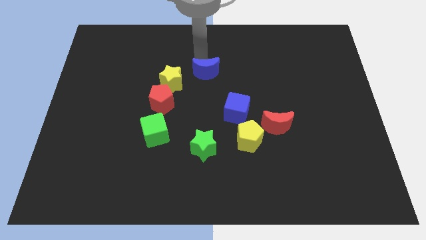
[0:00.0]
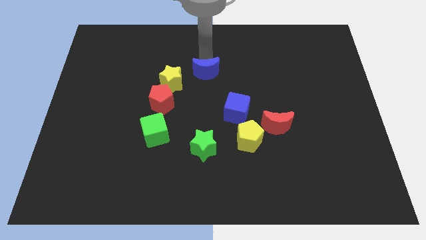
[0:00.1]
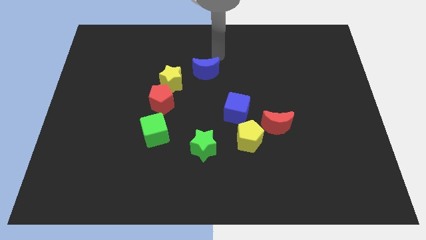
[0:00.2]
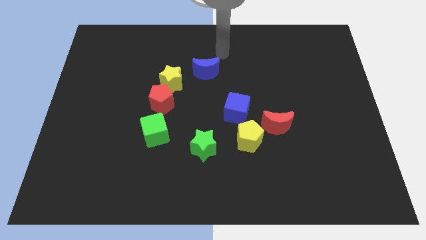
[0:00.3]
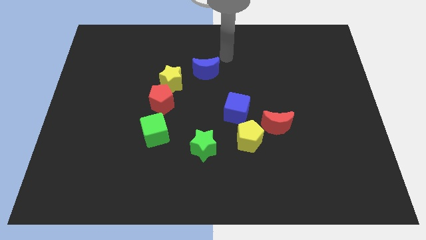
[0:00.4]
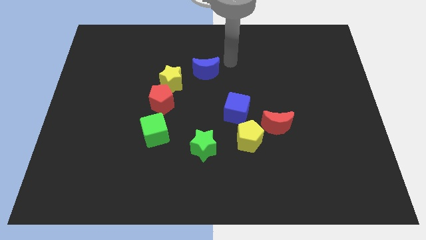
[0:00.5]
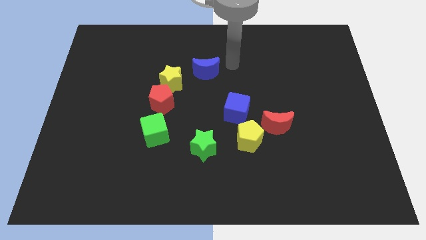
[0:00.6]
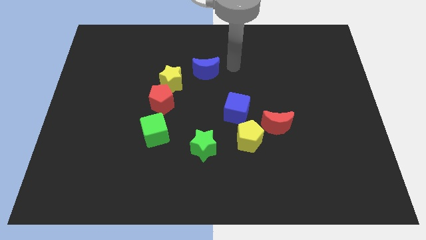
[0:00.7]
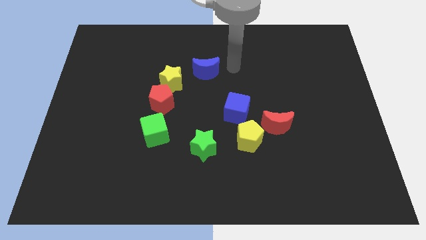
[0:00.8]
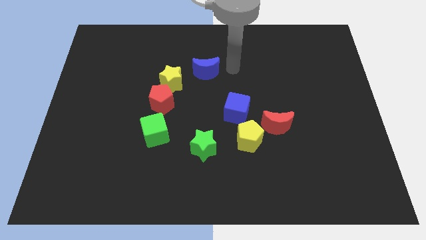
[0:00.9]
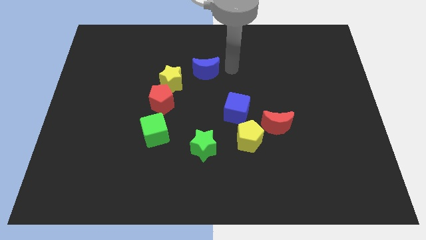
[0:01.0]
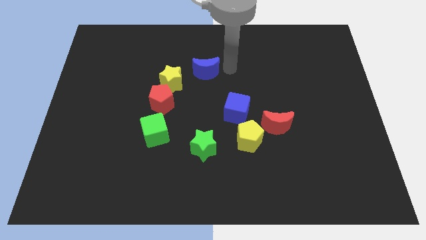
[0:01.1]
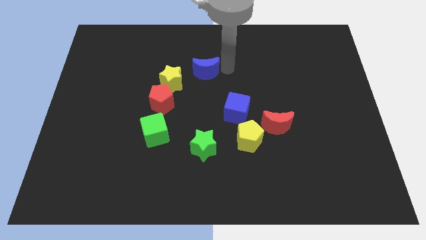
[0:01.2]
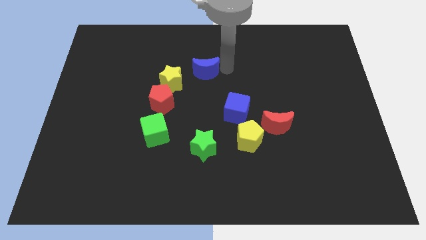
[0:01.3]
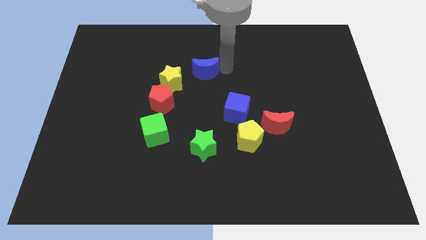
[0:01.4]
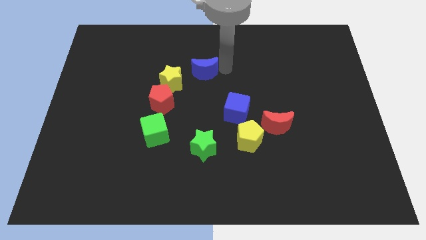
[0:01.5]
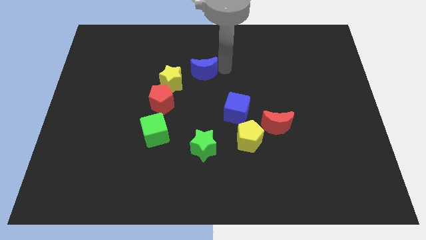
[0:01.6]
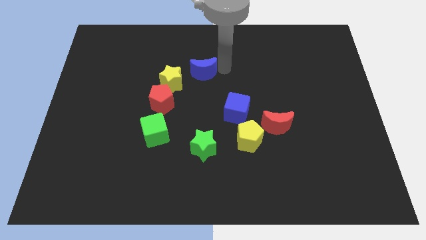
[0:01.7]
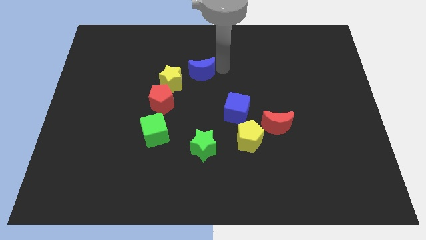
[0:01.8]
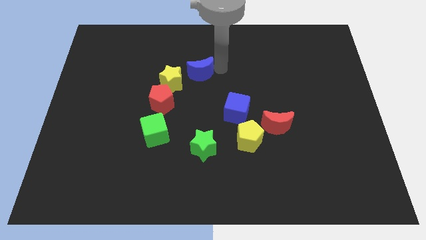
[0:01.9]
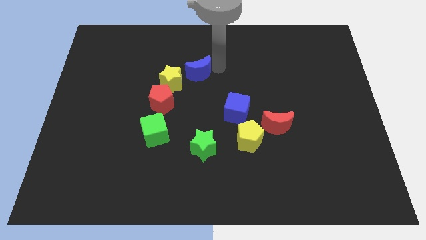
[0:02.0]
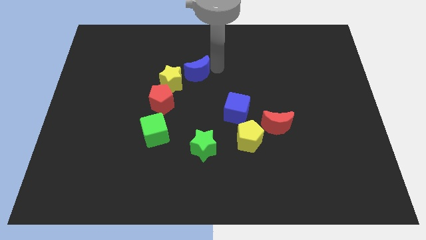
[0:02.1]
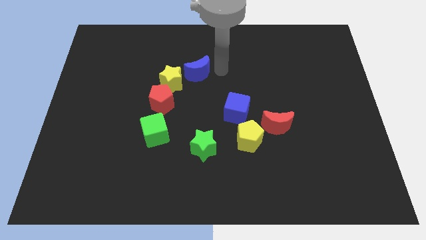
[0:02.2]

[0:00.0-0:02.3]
move the blue crescent to the top right side of the yellow star

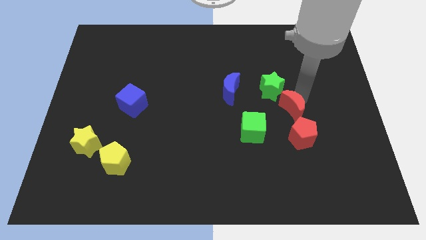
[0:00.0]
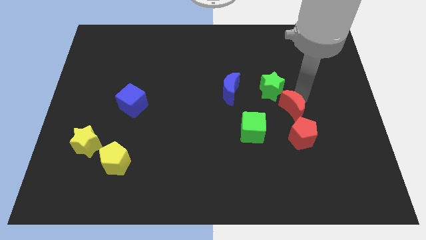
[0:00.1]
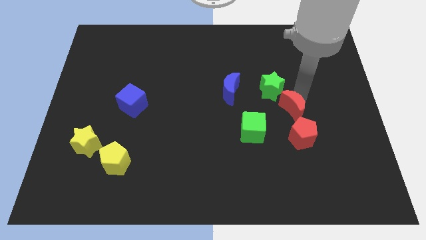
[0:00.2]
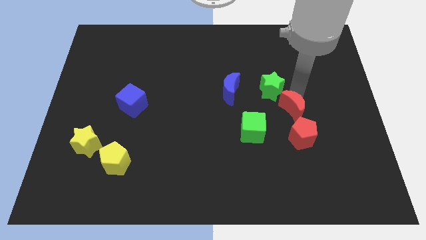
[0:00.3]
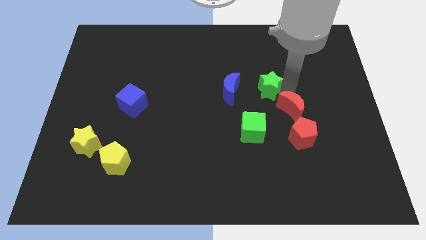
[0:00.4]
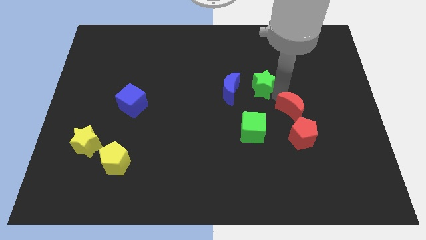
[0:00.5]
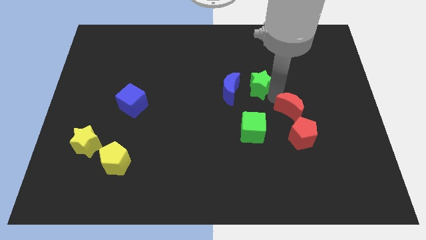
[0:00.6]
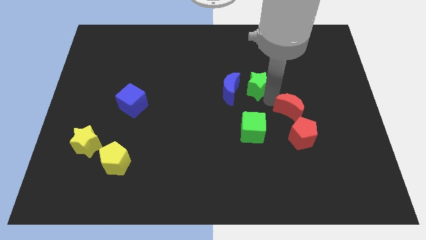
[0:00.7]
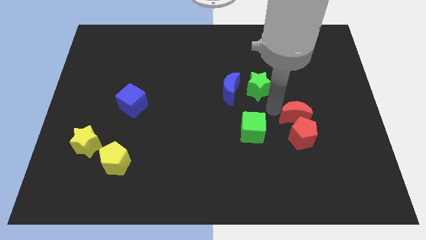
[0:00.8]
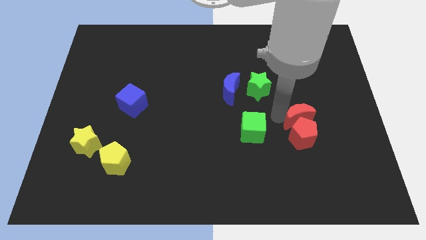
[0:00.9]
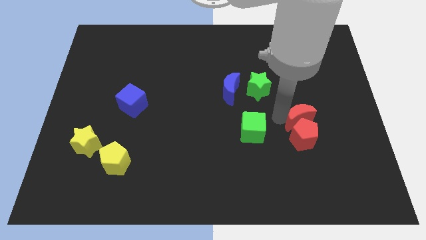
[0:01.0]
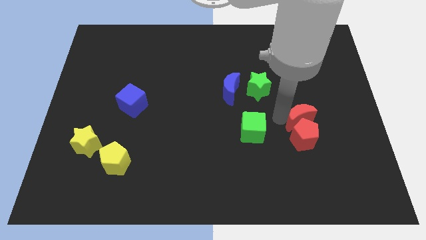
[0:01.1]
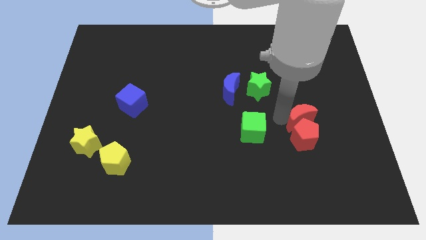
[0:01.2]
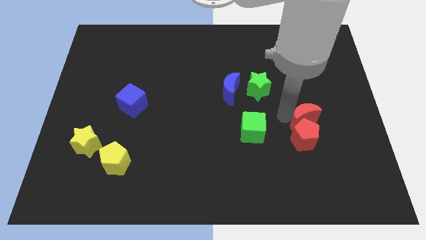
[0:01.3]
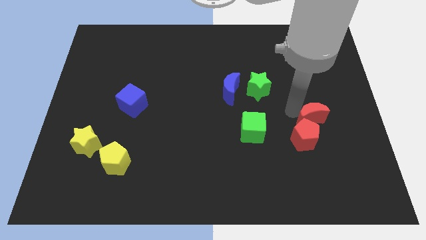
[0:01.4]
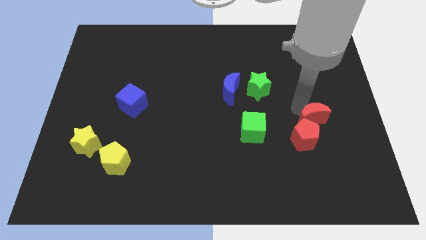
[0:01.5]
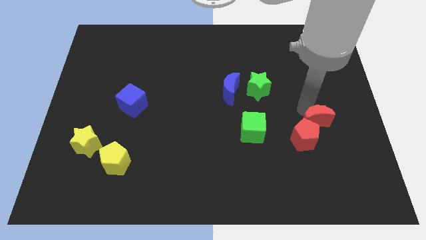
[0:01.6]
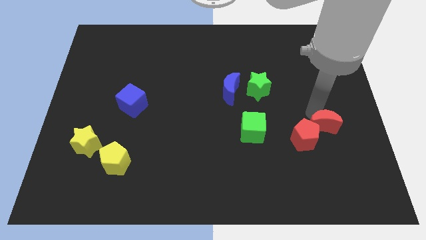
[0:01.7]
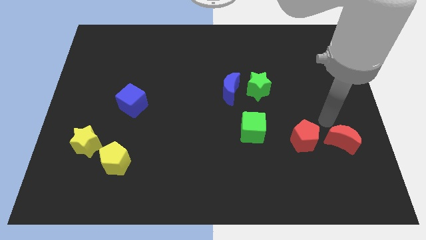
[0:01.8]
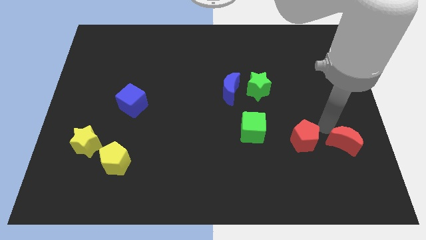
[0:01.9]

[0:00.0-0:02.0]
separate red moon from green star

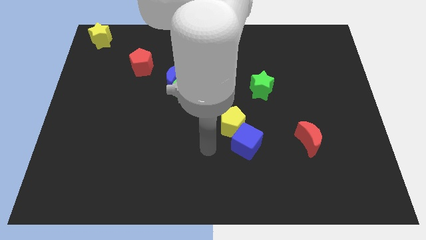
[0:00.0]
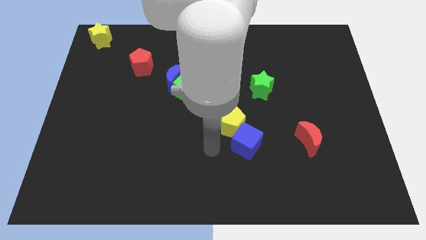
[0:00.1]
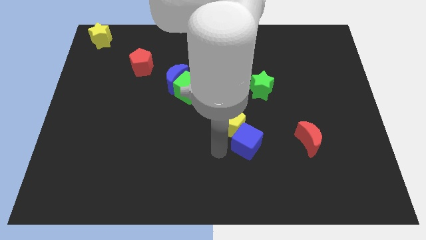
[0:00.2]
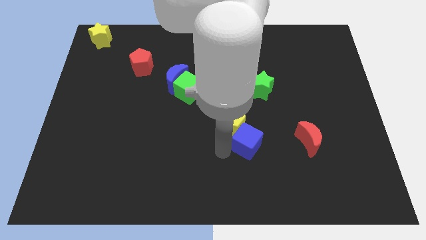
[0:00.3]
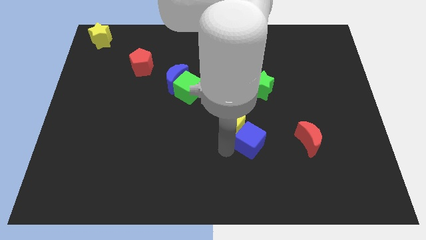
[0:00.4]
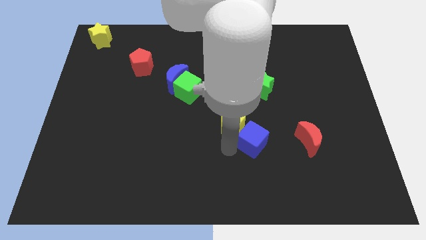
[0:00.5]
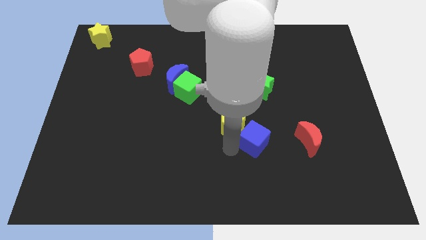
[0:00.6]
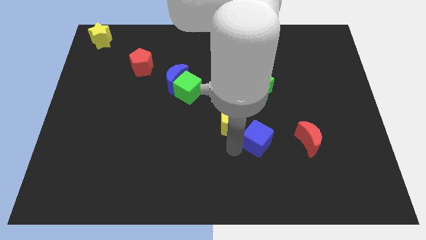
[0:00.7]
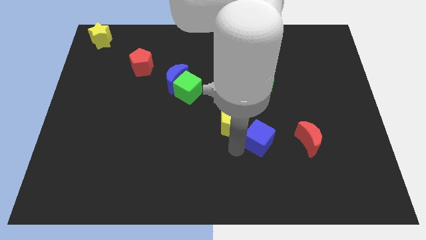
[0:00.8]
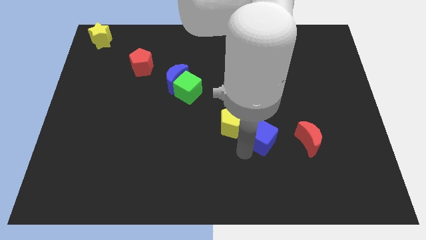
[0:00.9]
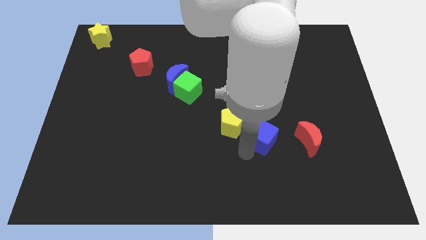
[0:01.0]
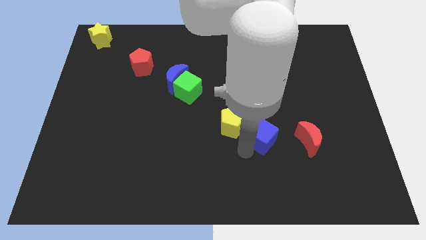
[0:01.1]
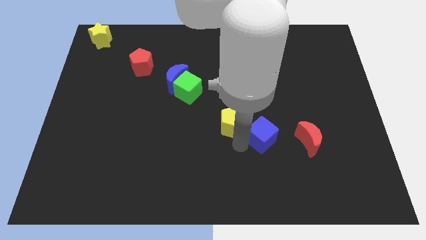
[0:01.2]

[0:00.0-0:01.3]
move the blue cube slightly towards the red moon

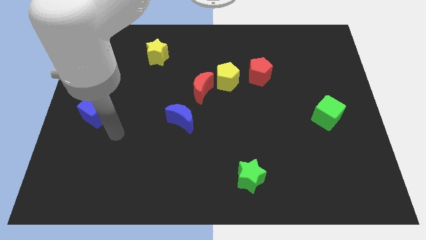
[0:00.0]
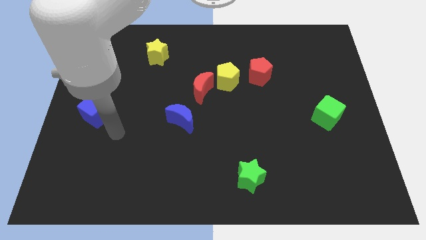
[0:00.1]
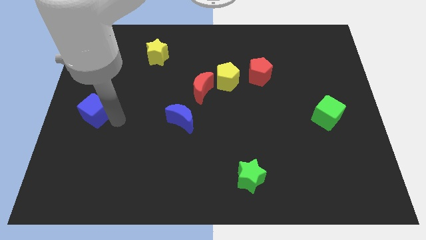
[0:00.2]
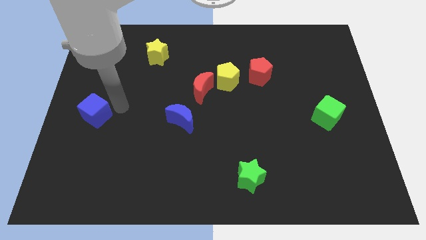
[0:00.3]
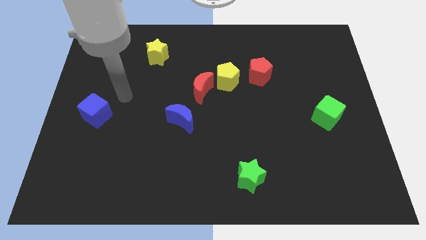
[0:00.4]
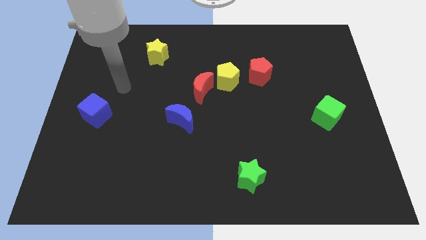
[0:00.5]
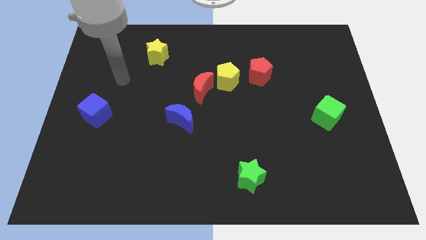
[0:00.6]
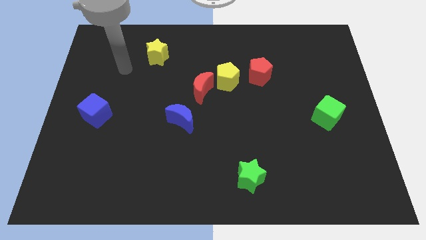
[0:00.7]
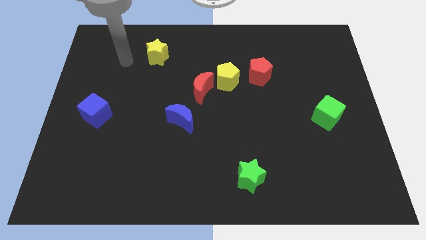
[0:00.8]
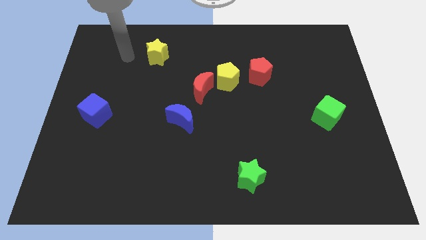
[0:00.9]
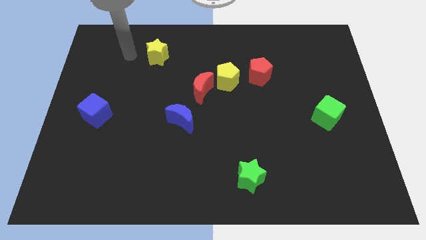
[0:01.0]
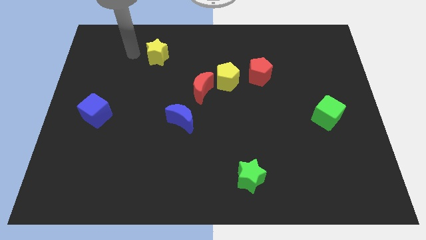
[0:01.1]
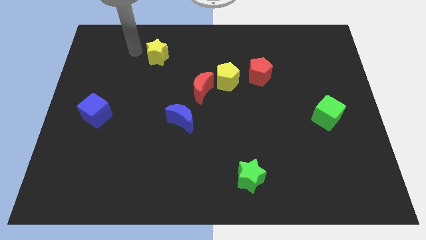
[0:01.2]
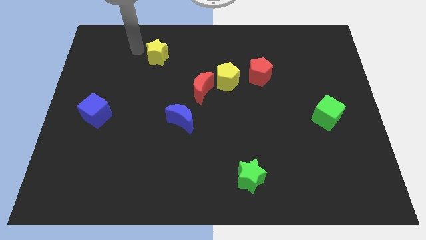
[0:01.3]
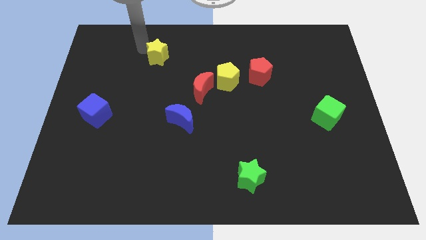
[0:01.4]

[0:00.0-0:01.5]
place the arm towards the yellow star

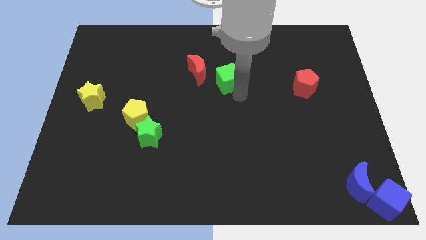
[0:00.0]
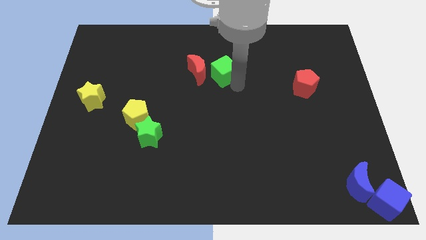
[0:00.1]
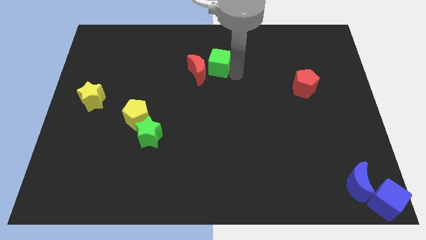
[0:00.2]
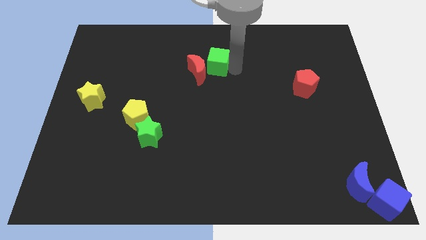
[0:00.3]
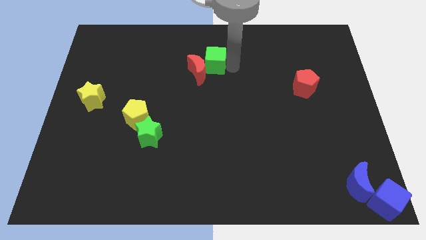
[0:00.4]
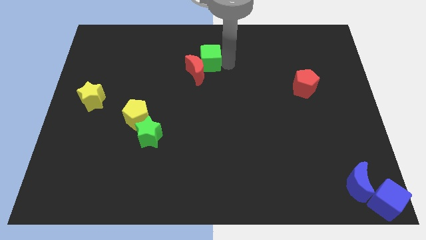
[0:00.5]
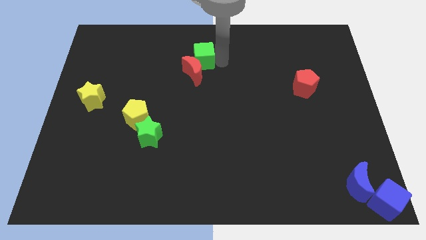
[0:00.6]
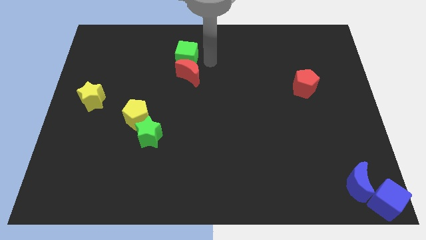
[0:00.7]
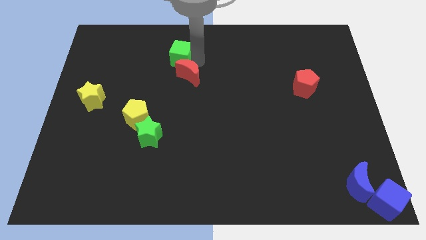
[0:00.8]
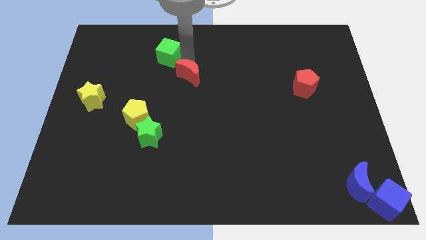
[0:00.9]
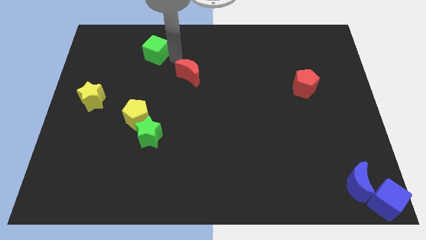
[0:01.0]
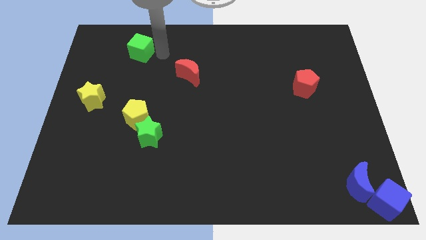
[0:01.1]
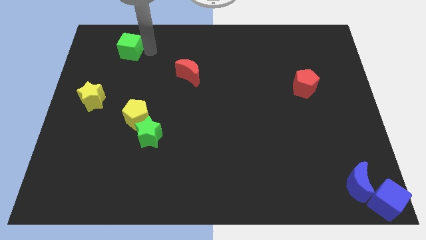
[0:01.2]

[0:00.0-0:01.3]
push the green cube towards the top left side of the board

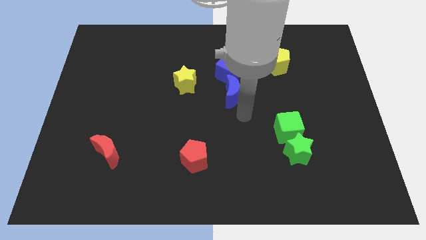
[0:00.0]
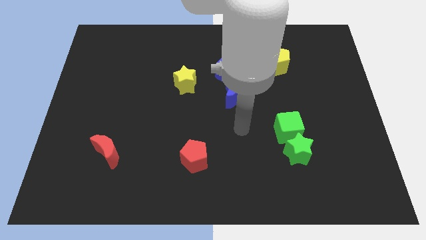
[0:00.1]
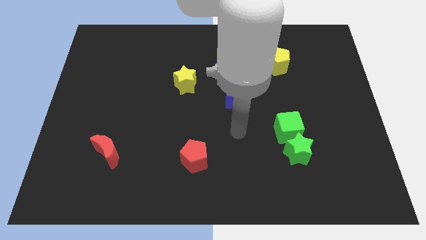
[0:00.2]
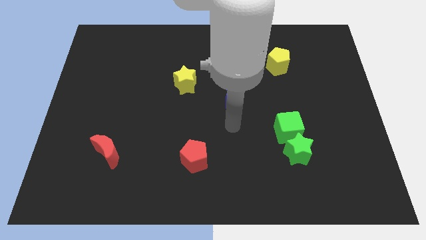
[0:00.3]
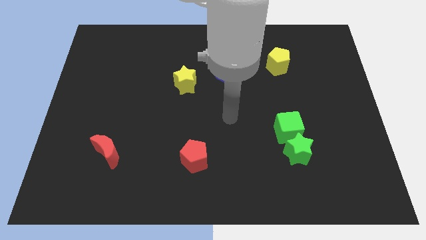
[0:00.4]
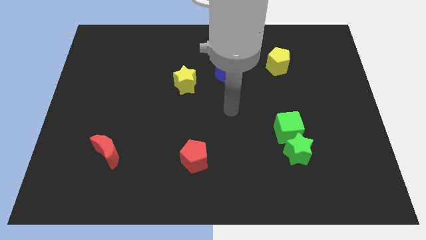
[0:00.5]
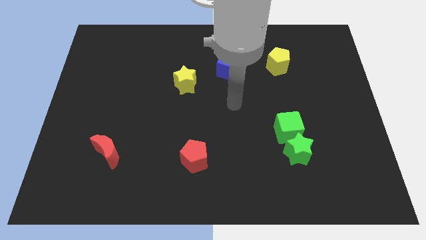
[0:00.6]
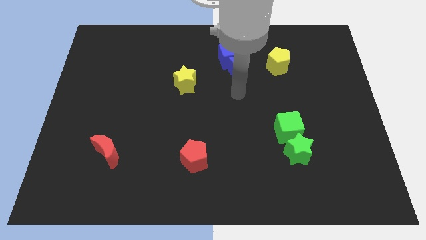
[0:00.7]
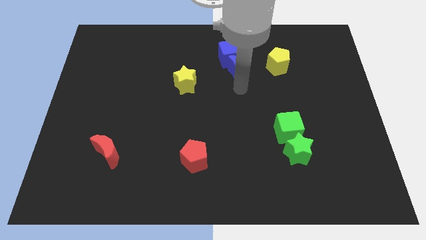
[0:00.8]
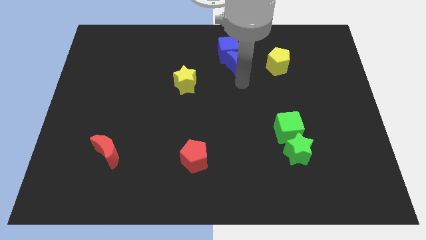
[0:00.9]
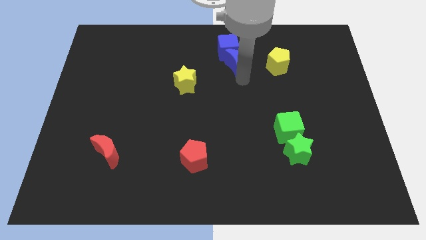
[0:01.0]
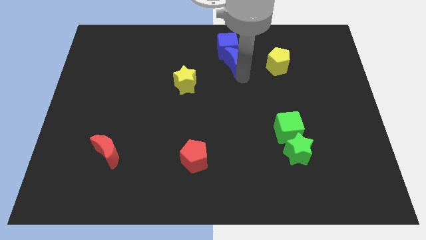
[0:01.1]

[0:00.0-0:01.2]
push the blue moon into the blue cube
